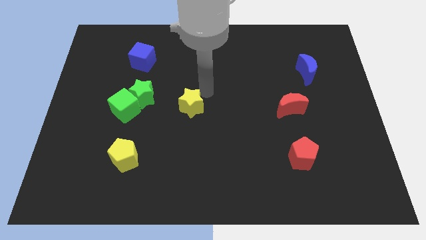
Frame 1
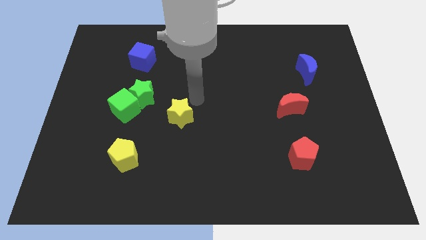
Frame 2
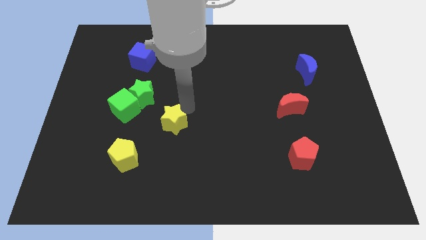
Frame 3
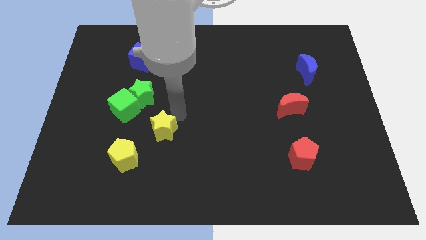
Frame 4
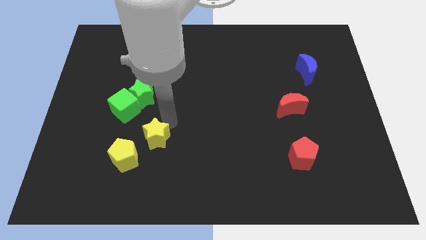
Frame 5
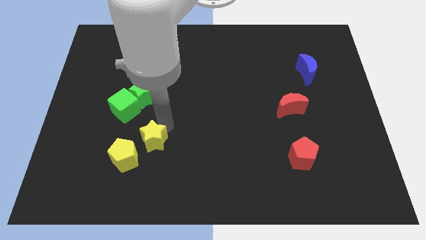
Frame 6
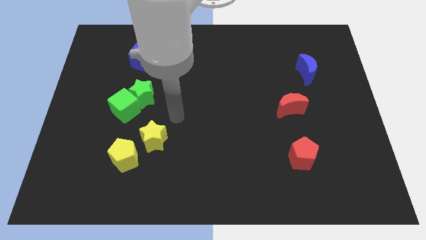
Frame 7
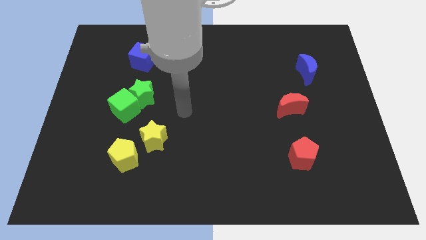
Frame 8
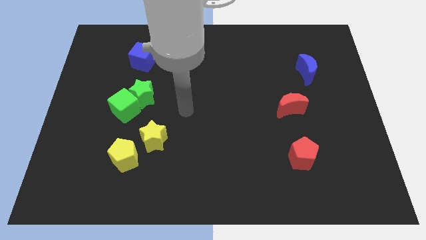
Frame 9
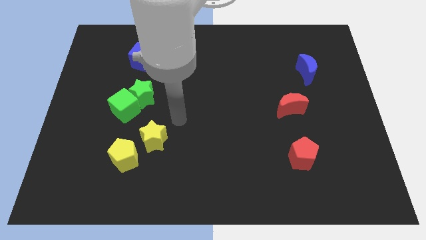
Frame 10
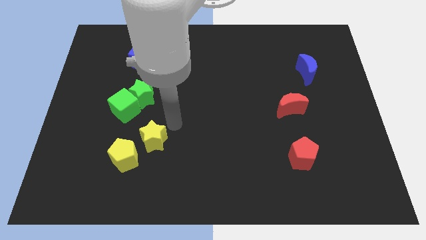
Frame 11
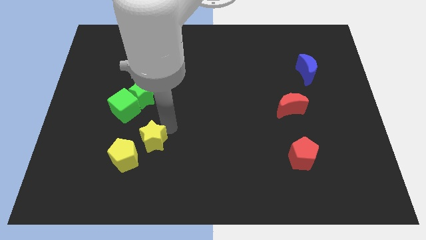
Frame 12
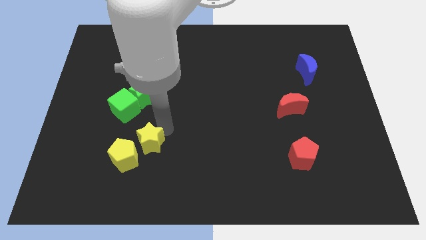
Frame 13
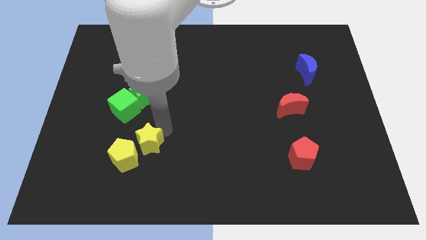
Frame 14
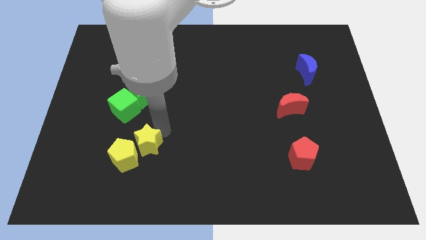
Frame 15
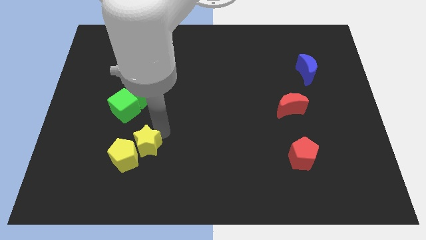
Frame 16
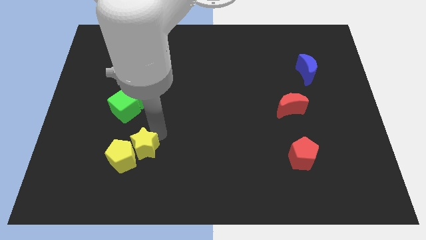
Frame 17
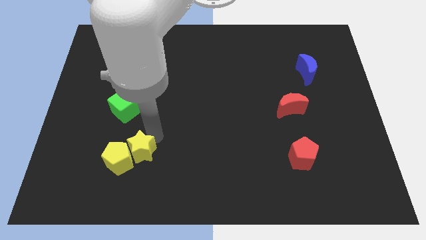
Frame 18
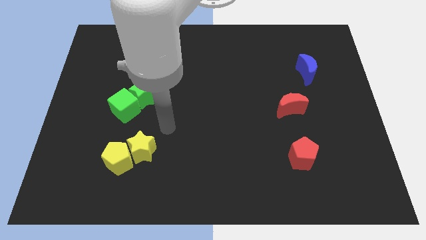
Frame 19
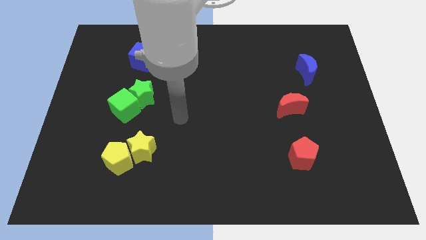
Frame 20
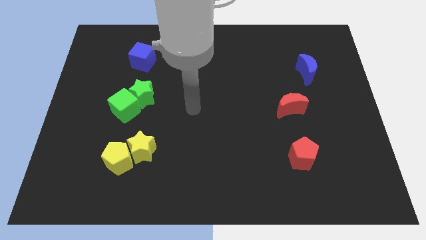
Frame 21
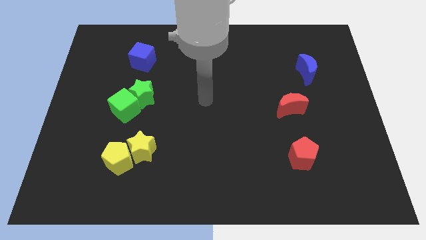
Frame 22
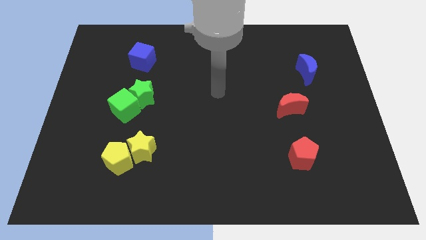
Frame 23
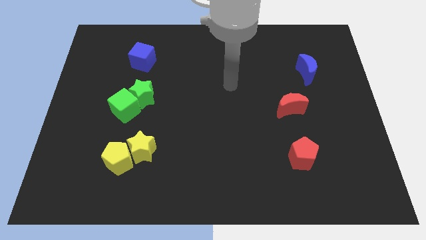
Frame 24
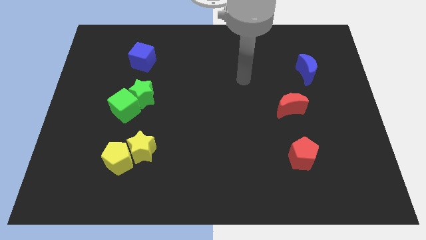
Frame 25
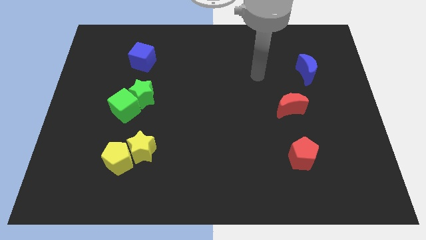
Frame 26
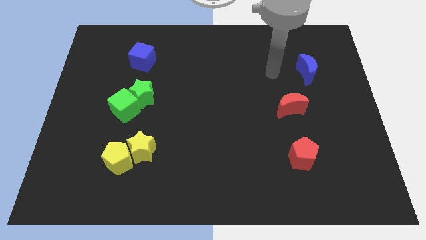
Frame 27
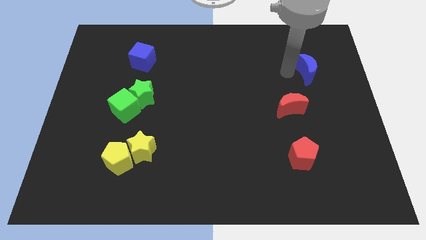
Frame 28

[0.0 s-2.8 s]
move yellow star into the yellow pentagon

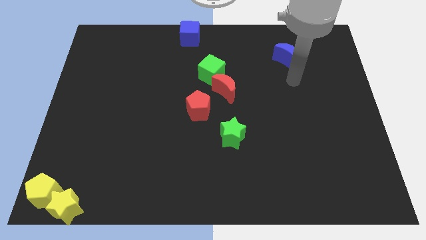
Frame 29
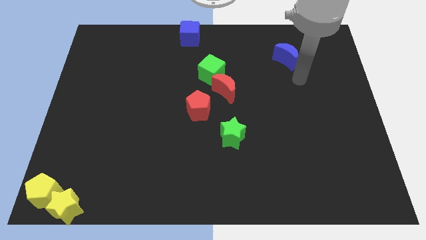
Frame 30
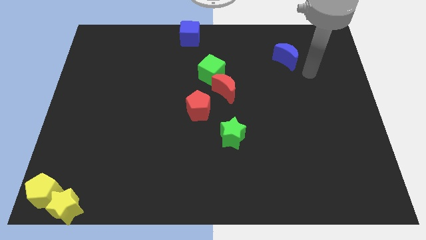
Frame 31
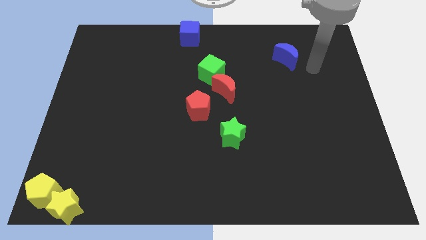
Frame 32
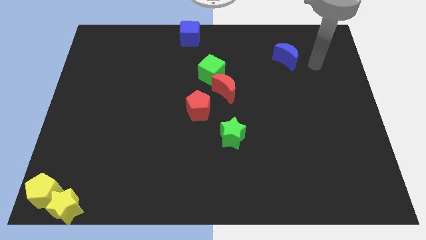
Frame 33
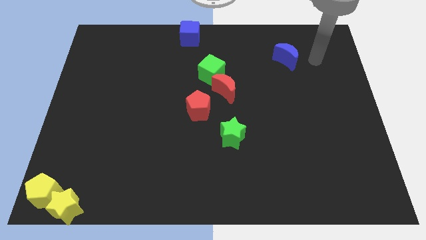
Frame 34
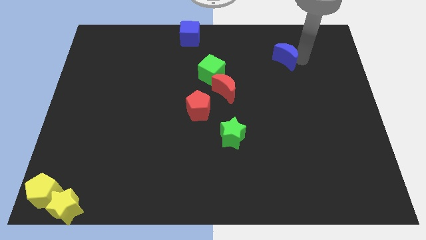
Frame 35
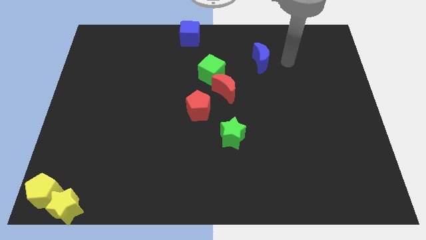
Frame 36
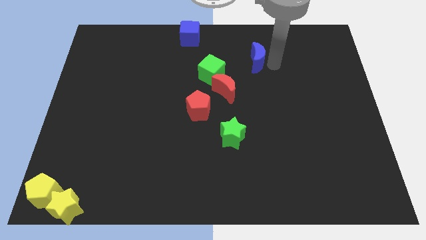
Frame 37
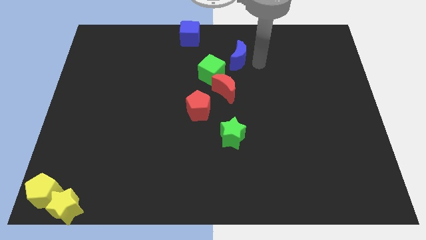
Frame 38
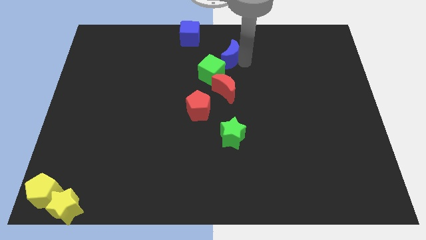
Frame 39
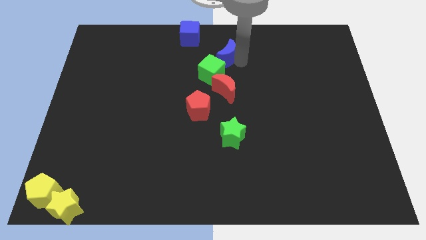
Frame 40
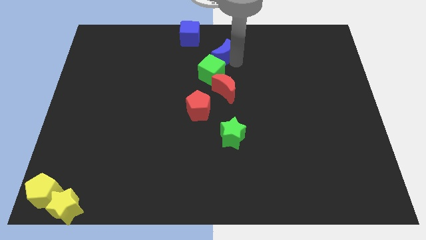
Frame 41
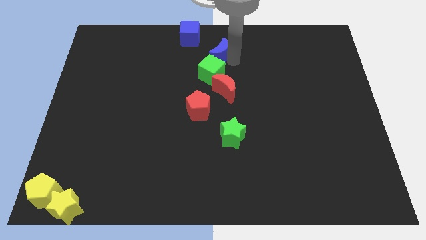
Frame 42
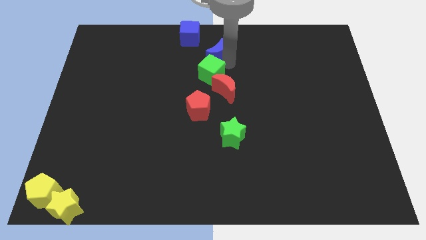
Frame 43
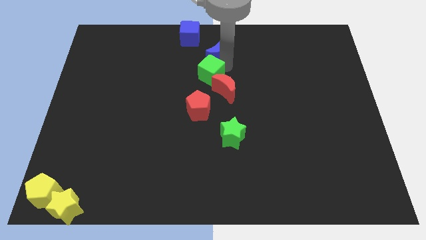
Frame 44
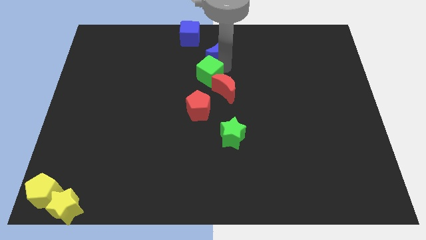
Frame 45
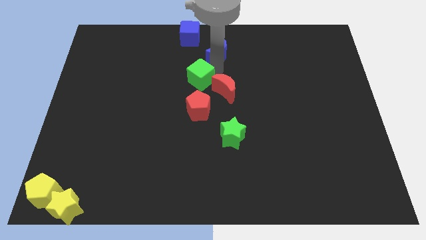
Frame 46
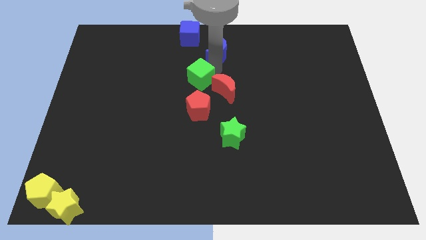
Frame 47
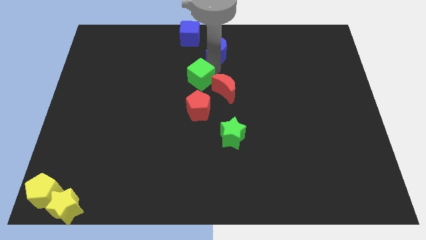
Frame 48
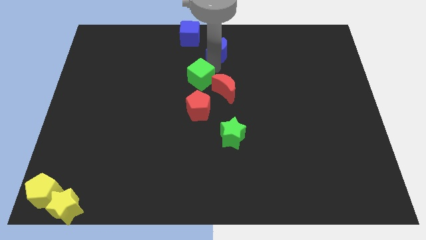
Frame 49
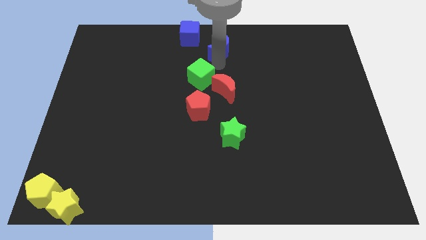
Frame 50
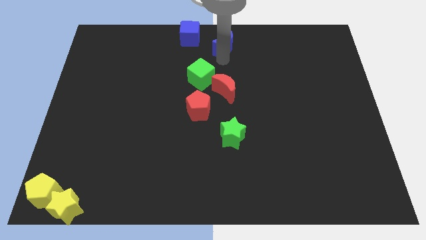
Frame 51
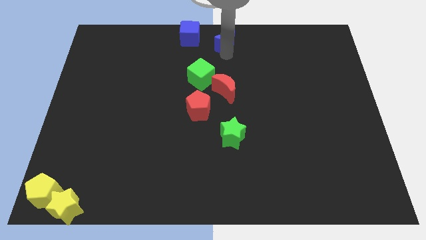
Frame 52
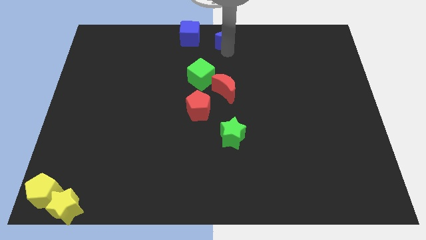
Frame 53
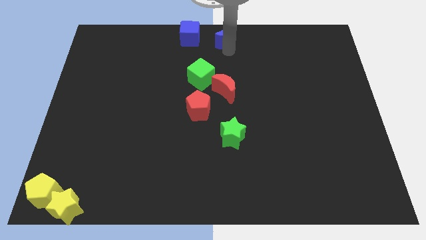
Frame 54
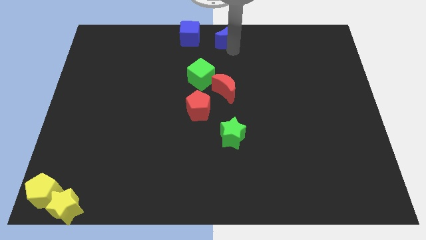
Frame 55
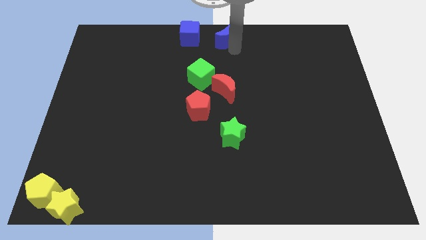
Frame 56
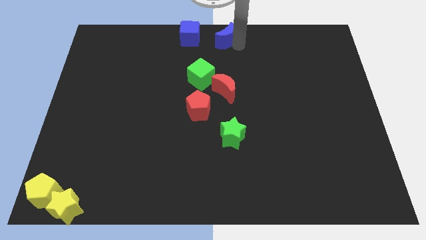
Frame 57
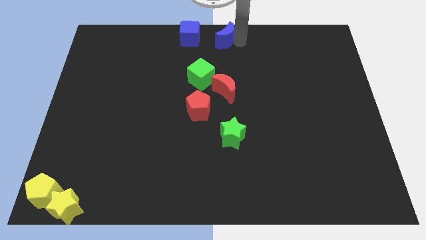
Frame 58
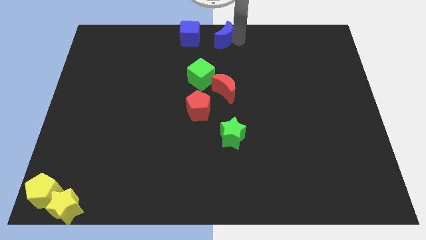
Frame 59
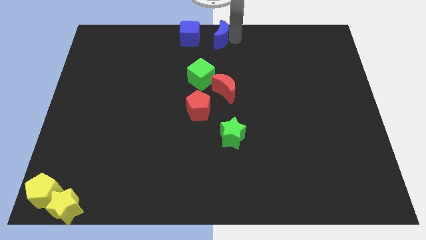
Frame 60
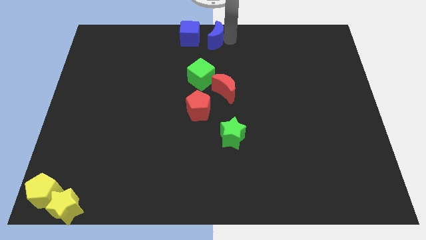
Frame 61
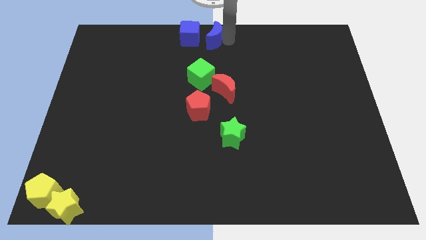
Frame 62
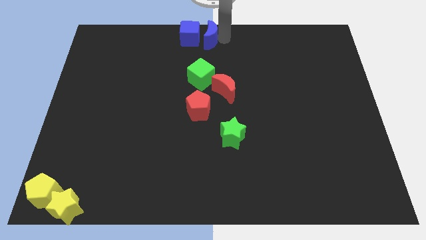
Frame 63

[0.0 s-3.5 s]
move blue crescent right to the blue cube

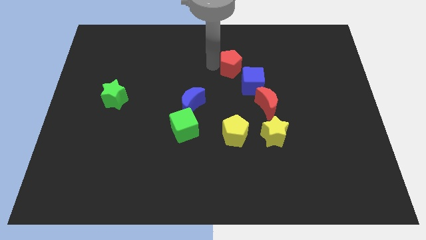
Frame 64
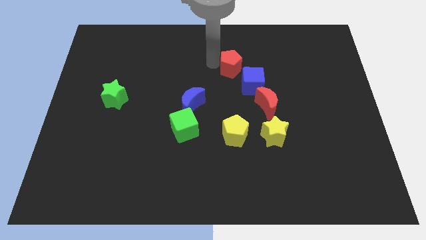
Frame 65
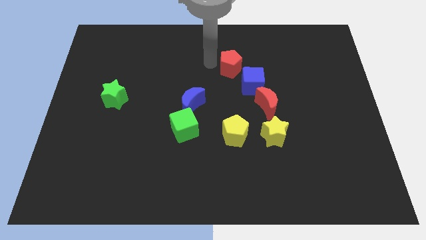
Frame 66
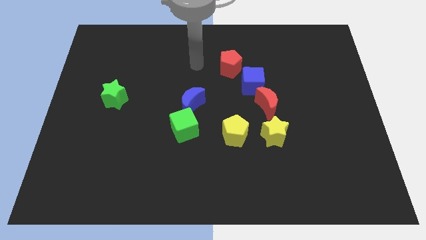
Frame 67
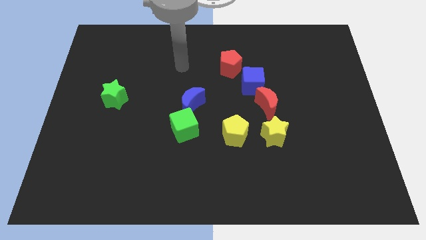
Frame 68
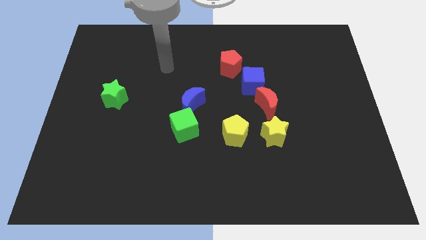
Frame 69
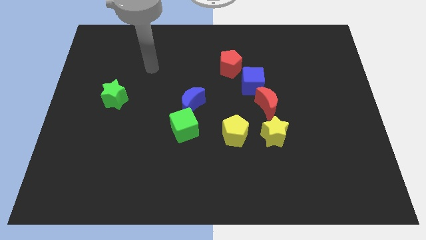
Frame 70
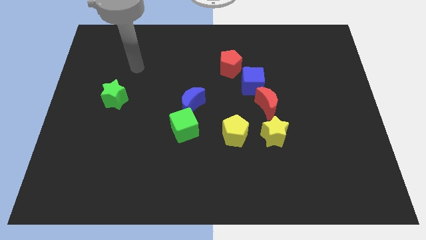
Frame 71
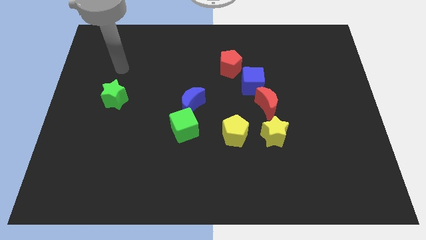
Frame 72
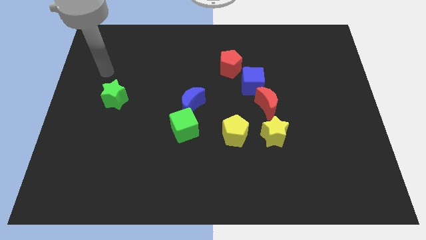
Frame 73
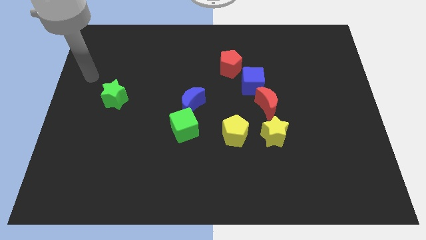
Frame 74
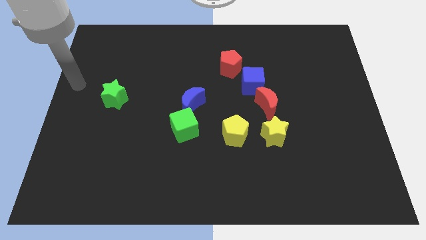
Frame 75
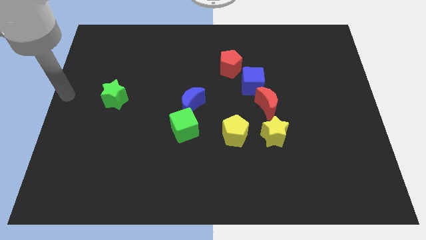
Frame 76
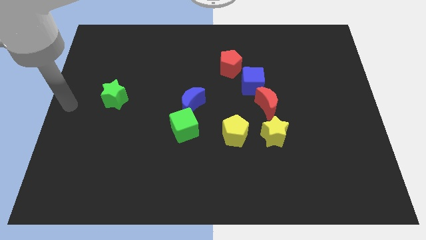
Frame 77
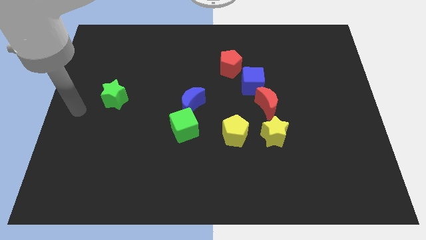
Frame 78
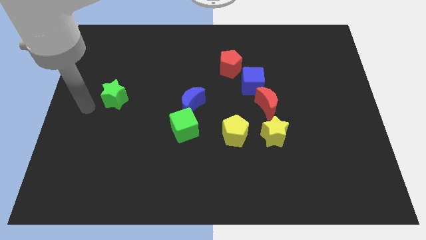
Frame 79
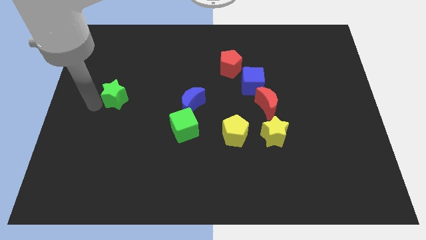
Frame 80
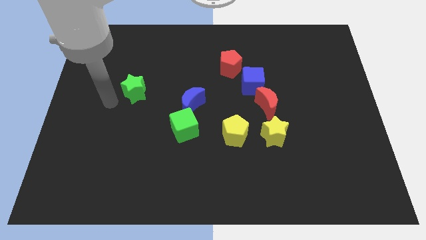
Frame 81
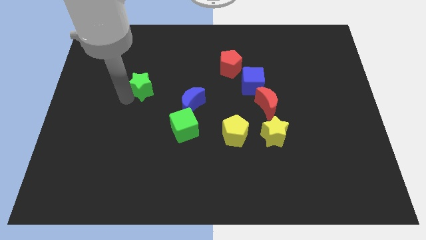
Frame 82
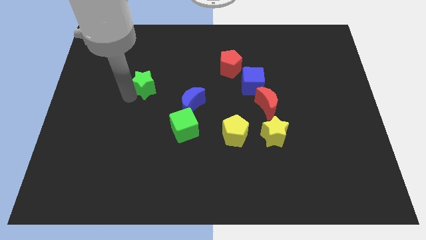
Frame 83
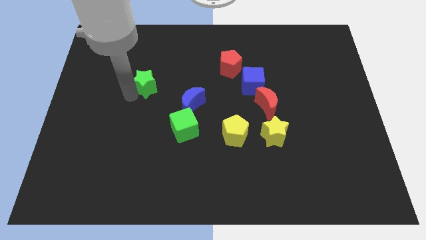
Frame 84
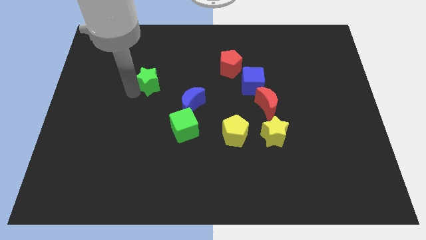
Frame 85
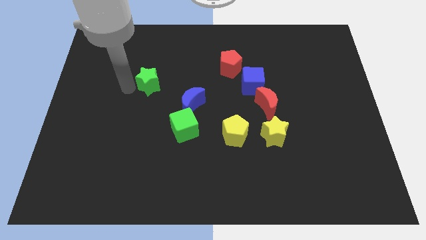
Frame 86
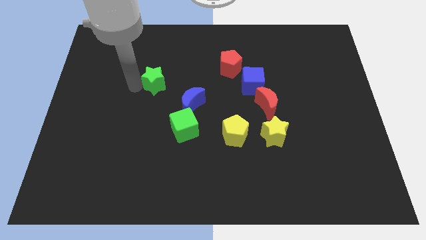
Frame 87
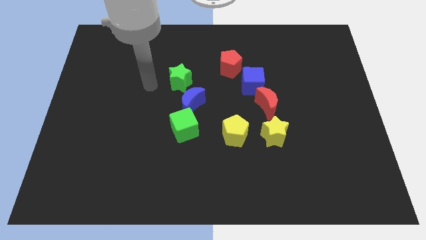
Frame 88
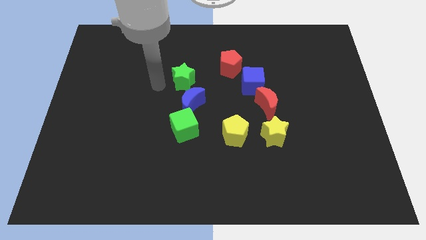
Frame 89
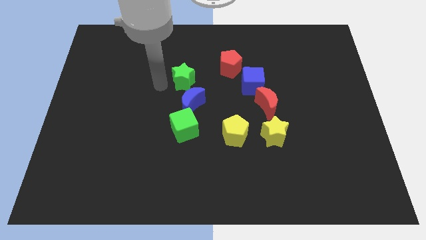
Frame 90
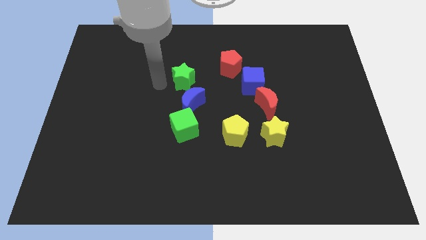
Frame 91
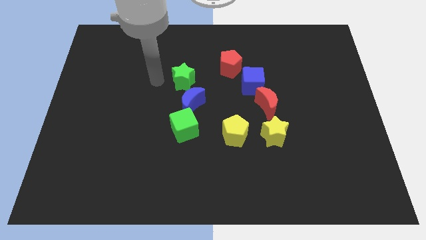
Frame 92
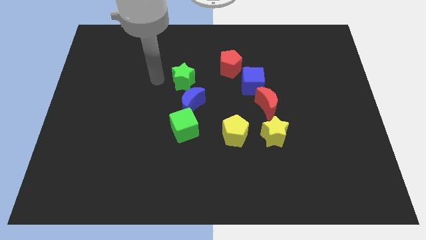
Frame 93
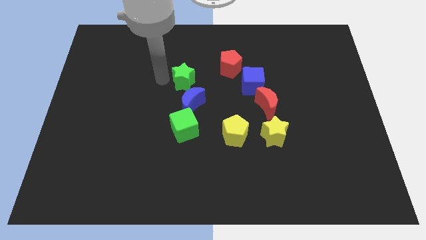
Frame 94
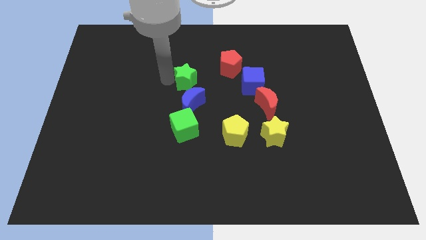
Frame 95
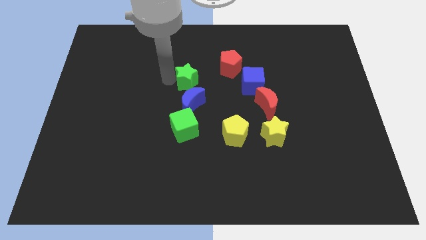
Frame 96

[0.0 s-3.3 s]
place the green star parallel to blue cube
